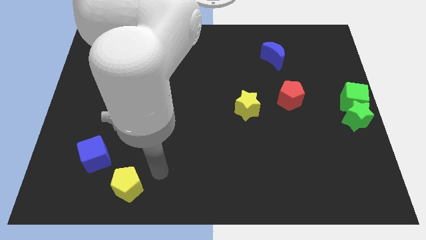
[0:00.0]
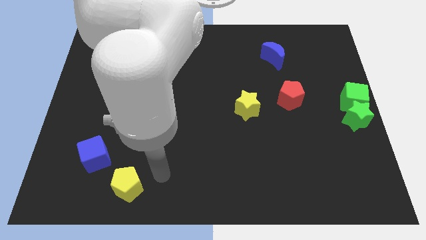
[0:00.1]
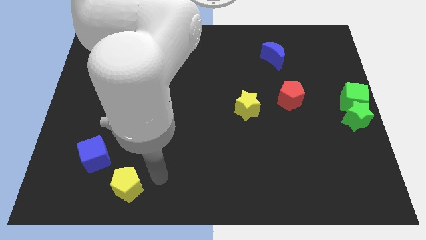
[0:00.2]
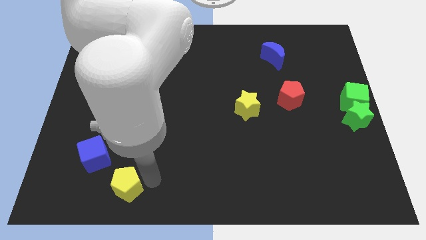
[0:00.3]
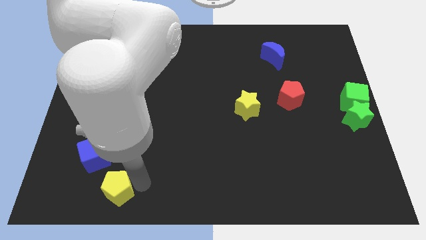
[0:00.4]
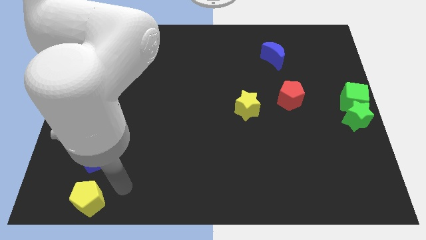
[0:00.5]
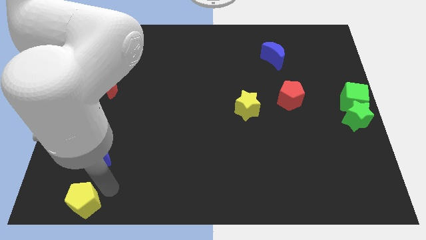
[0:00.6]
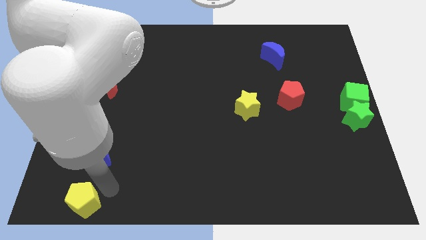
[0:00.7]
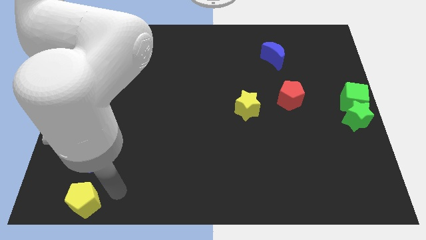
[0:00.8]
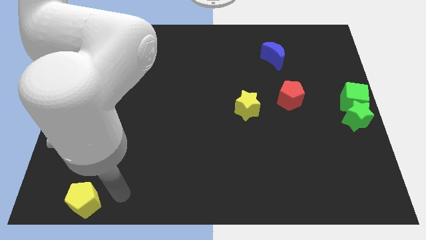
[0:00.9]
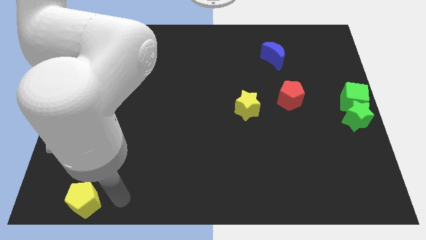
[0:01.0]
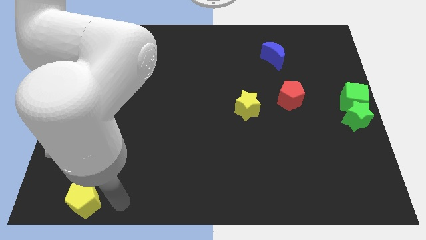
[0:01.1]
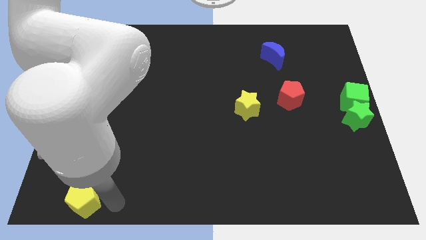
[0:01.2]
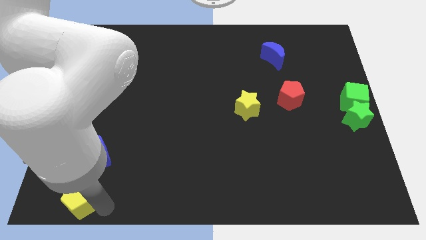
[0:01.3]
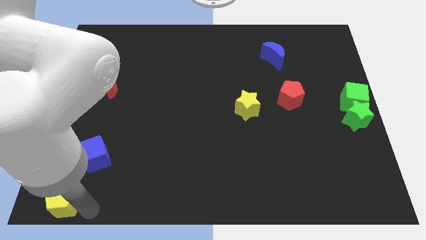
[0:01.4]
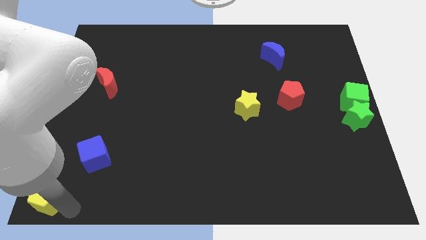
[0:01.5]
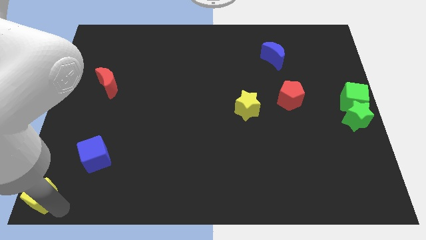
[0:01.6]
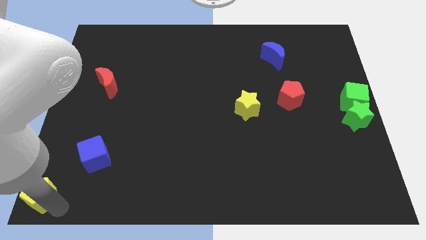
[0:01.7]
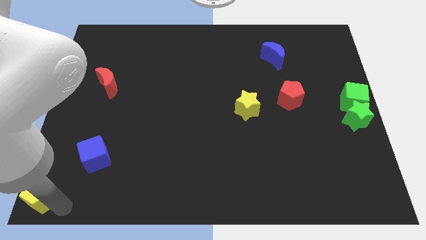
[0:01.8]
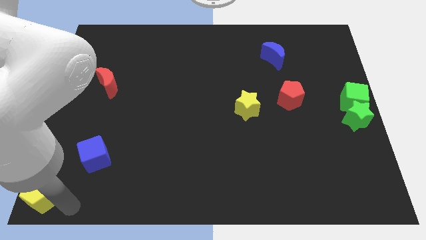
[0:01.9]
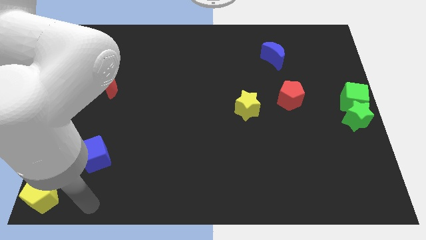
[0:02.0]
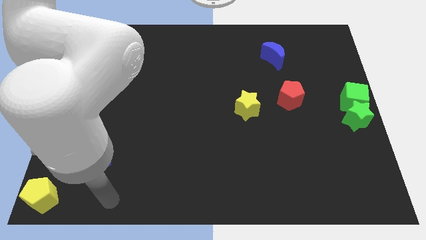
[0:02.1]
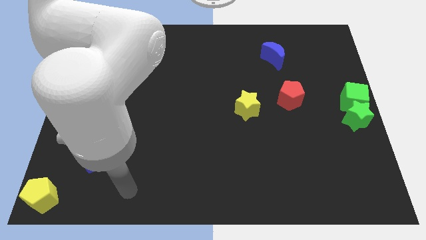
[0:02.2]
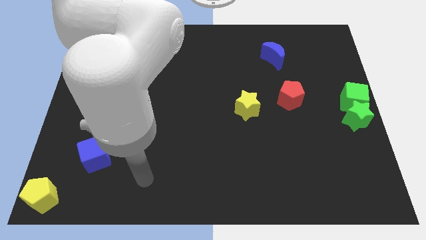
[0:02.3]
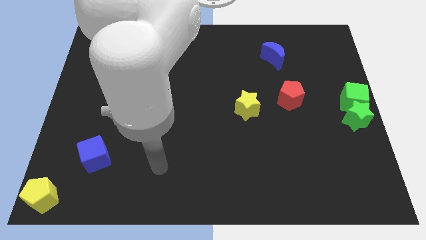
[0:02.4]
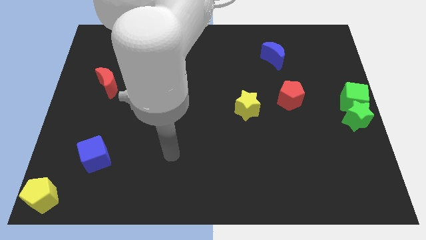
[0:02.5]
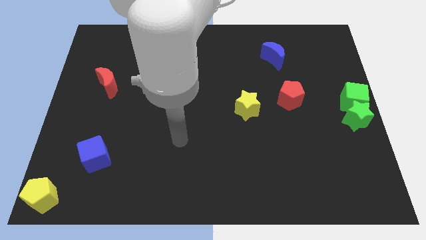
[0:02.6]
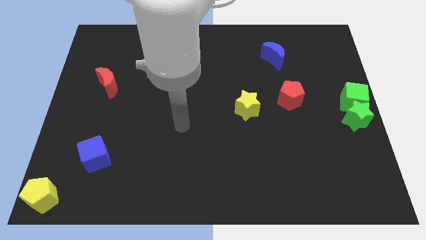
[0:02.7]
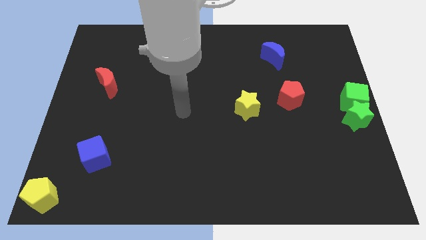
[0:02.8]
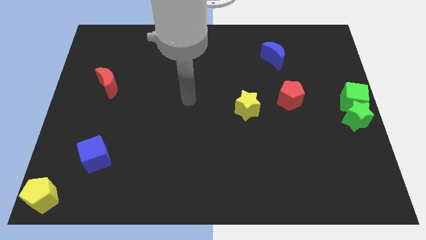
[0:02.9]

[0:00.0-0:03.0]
place the yellow pentagon at the bottom left corner of the board

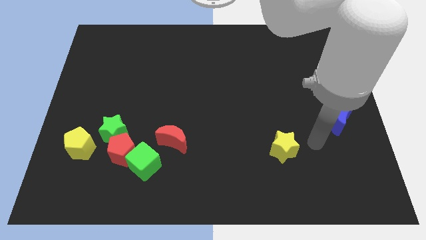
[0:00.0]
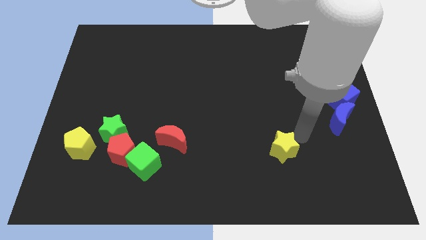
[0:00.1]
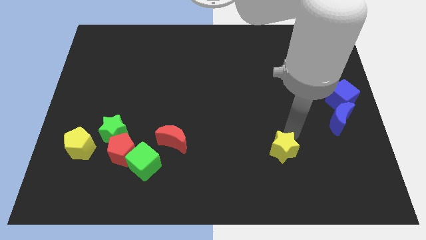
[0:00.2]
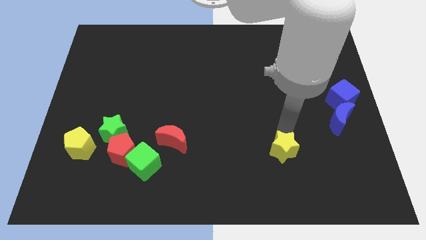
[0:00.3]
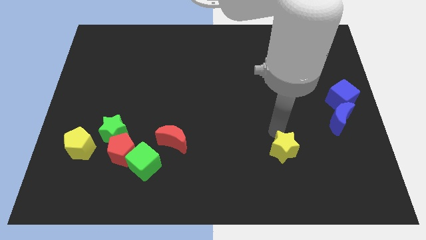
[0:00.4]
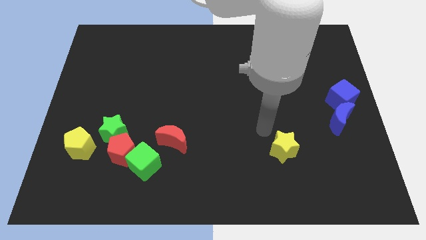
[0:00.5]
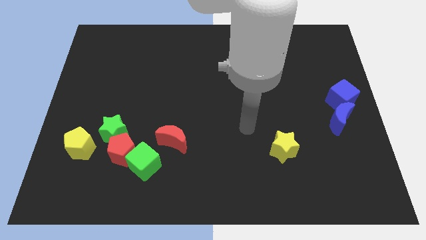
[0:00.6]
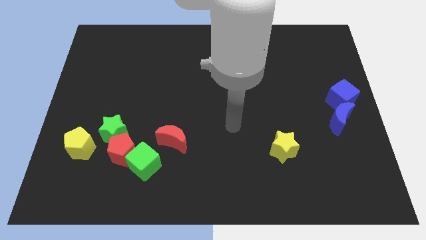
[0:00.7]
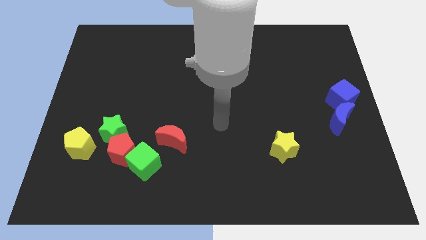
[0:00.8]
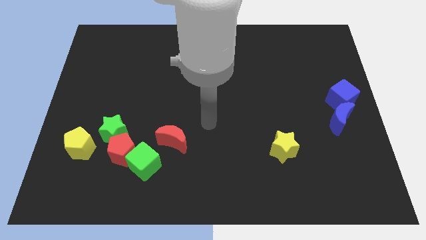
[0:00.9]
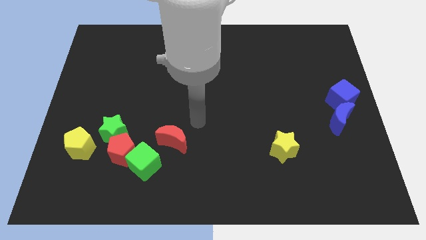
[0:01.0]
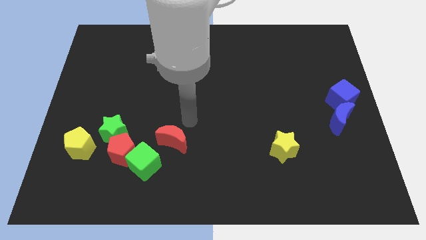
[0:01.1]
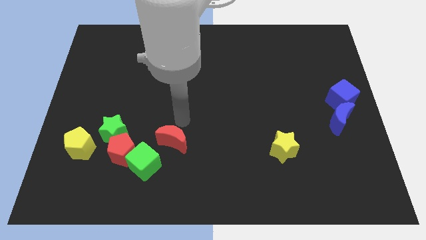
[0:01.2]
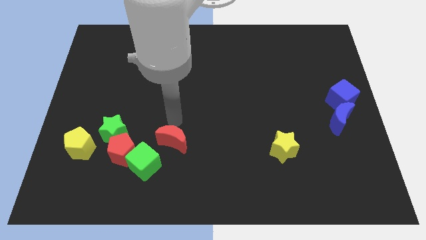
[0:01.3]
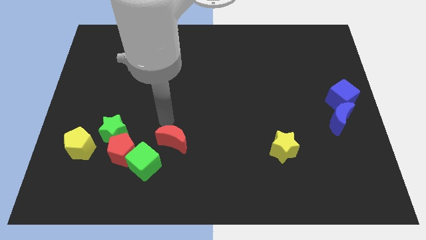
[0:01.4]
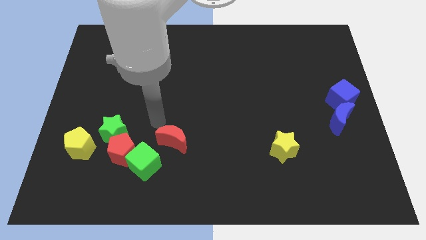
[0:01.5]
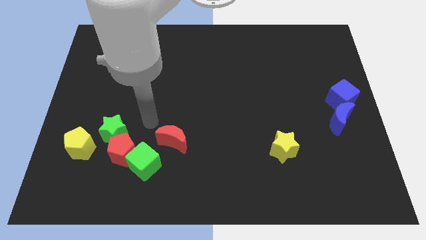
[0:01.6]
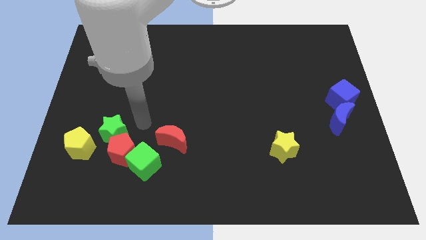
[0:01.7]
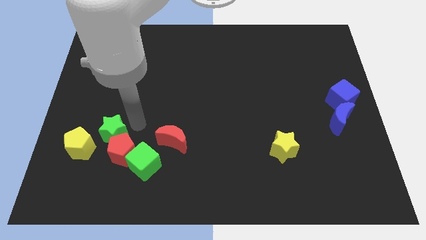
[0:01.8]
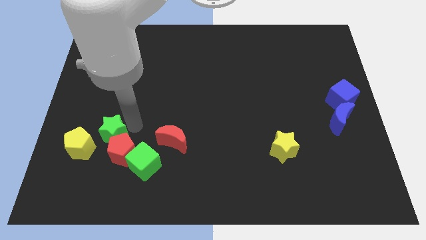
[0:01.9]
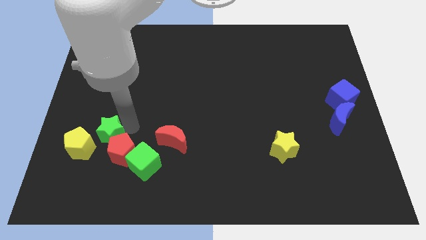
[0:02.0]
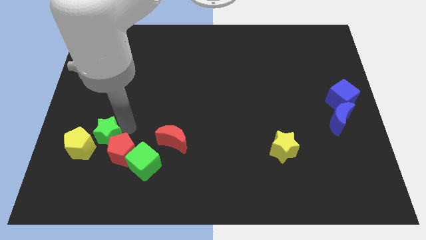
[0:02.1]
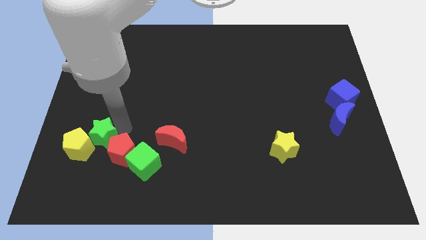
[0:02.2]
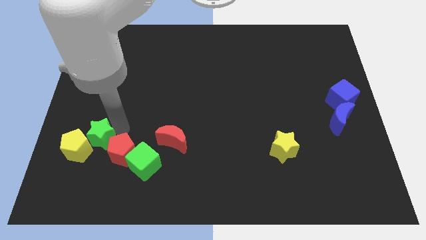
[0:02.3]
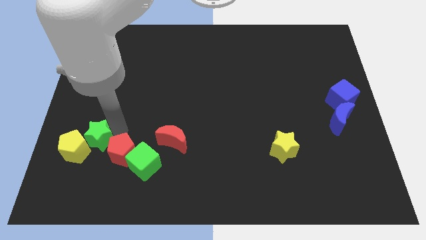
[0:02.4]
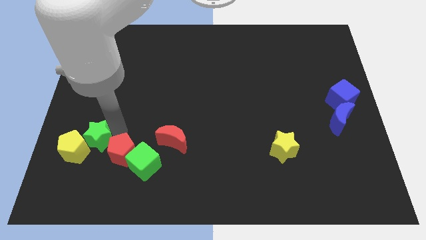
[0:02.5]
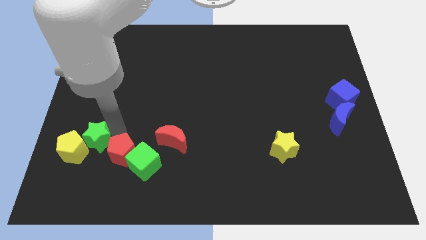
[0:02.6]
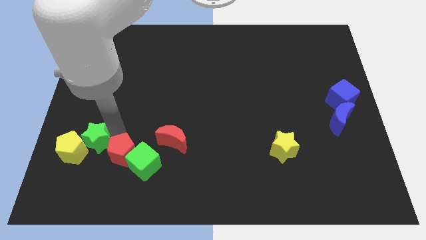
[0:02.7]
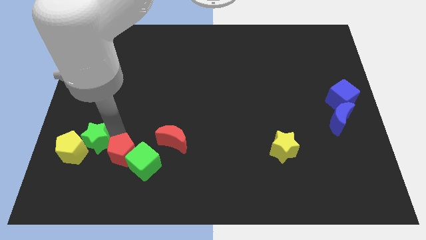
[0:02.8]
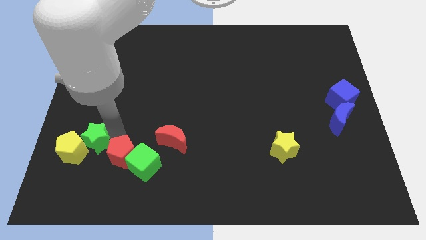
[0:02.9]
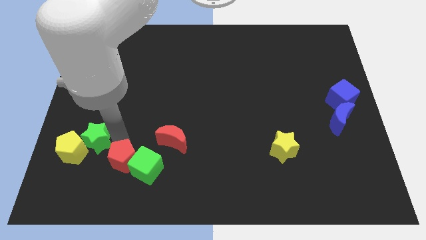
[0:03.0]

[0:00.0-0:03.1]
slide green star into yellow pentagon

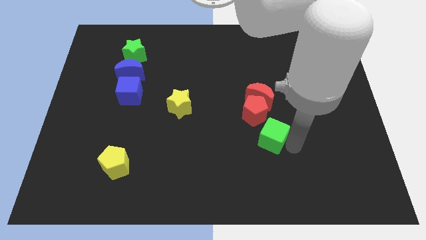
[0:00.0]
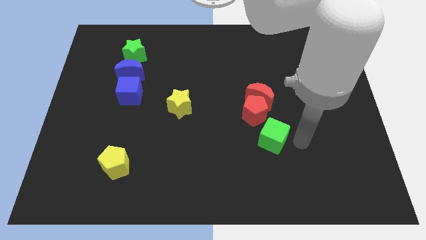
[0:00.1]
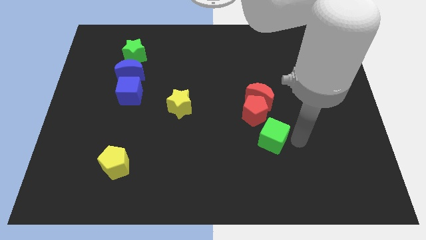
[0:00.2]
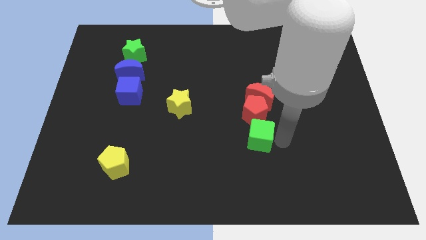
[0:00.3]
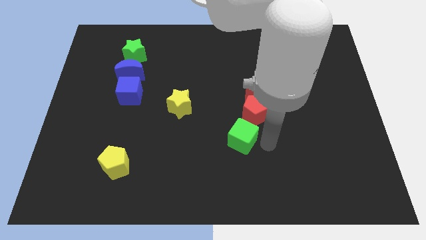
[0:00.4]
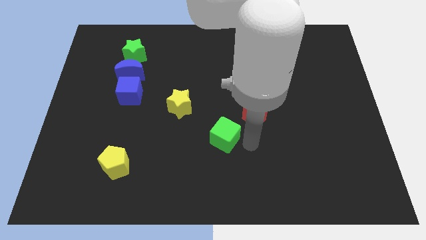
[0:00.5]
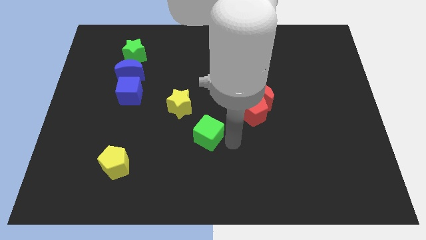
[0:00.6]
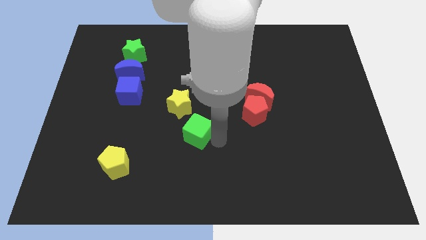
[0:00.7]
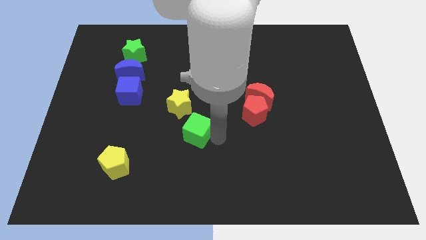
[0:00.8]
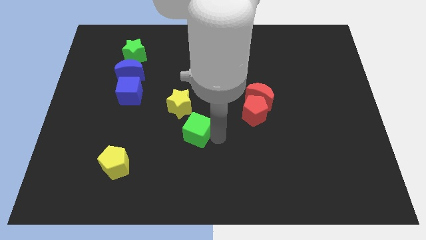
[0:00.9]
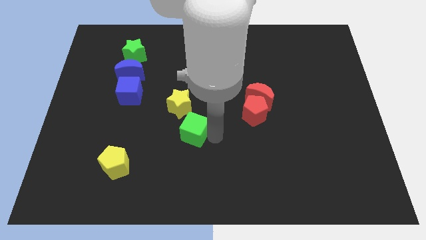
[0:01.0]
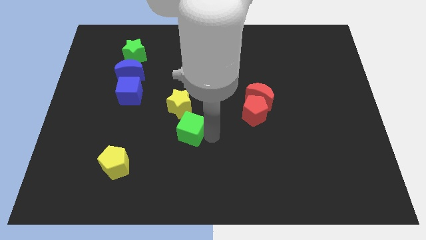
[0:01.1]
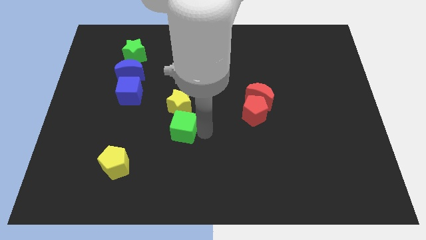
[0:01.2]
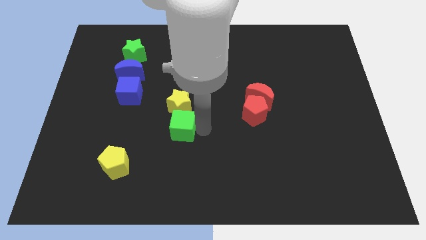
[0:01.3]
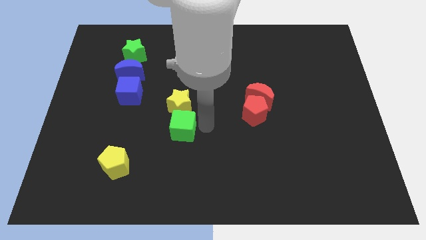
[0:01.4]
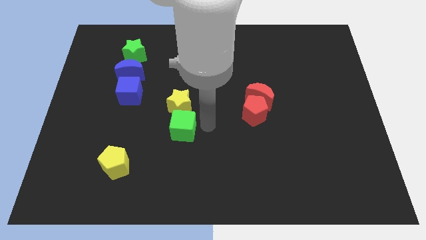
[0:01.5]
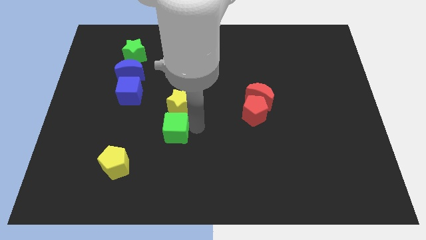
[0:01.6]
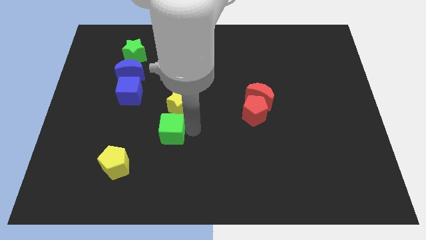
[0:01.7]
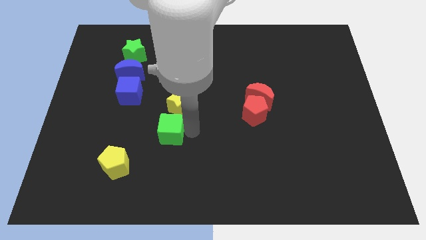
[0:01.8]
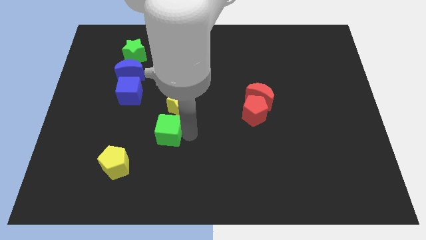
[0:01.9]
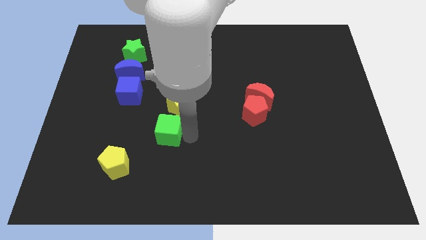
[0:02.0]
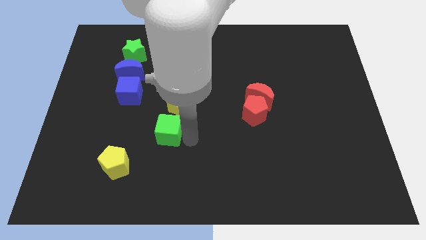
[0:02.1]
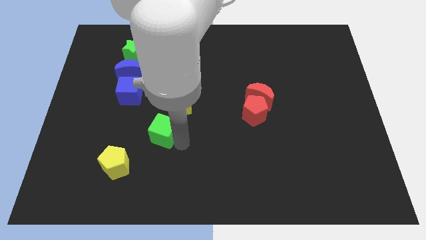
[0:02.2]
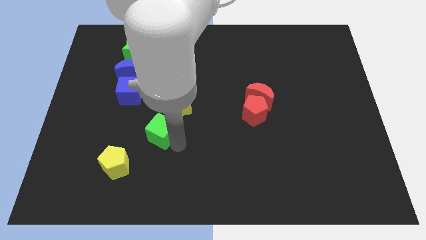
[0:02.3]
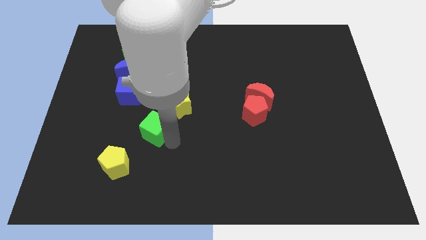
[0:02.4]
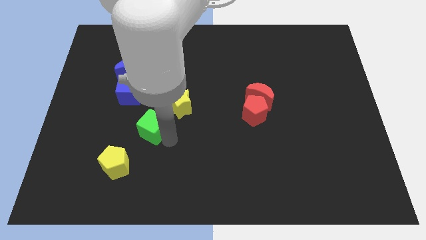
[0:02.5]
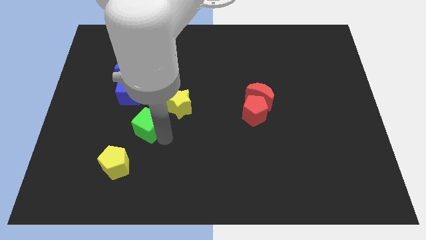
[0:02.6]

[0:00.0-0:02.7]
place the green cube in between the yellow star and yellow pentagon

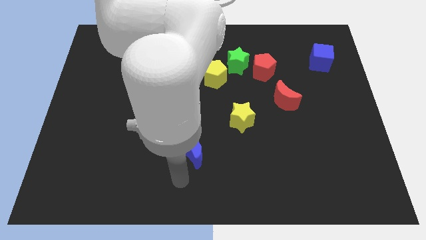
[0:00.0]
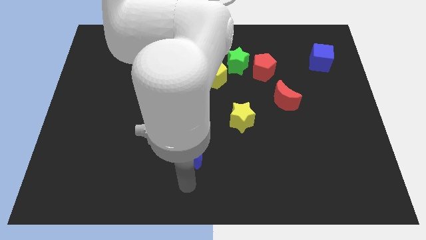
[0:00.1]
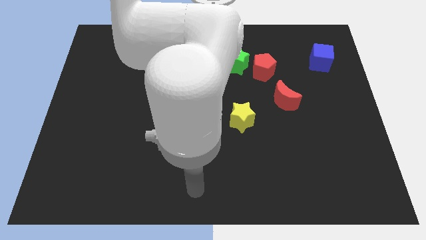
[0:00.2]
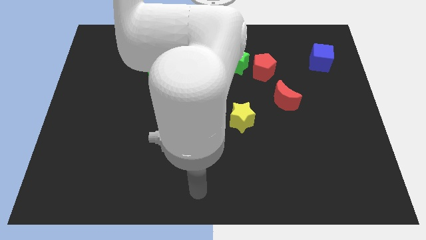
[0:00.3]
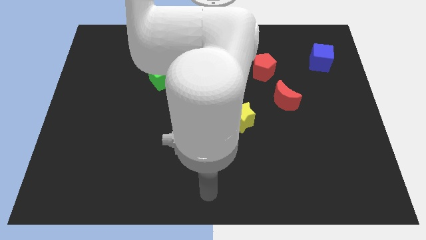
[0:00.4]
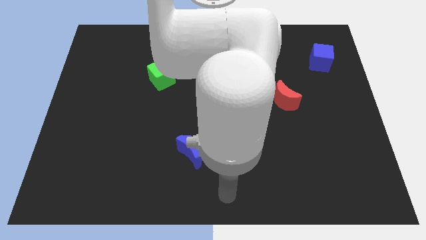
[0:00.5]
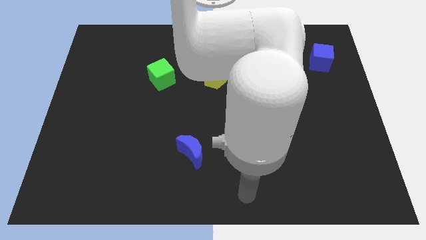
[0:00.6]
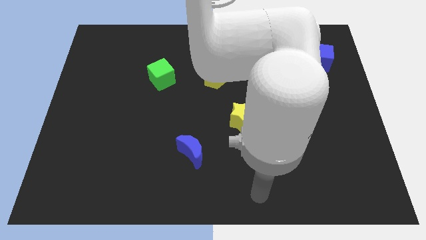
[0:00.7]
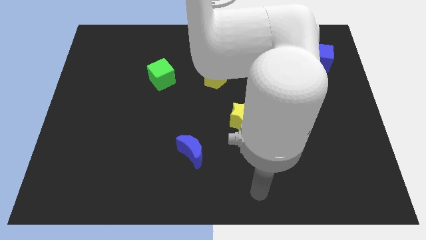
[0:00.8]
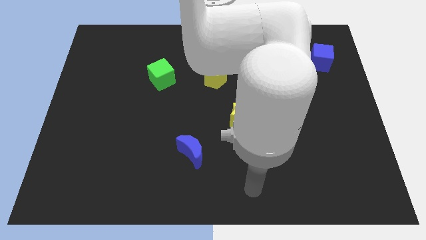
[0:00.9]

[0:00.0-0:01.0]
move away from the blue moon
